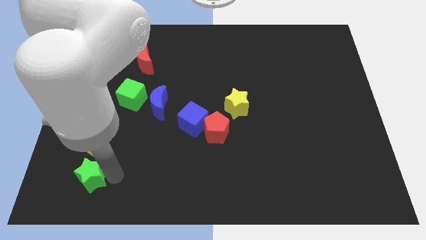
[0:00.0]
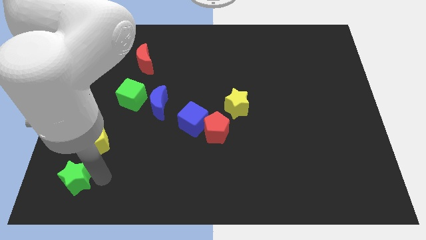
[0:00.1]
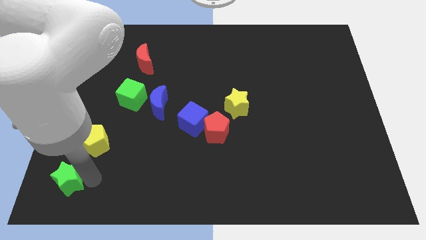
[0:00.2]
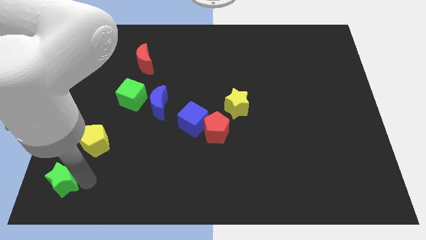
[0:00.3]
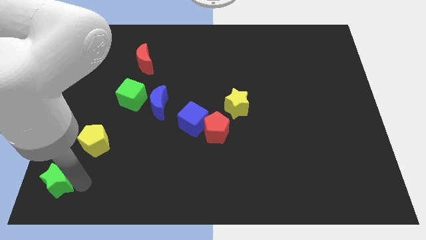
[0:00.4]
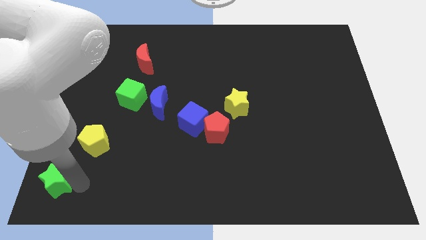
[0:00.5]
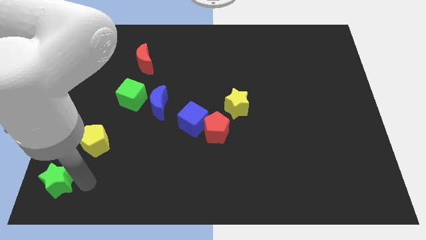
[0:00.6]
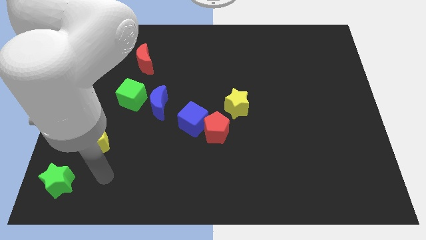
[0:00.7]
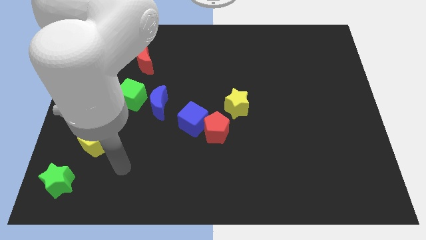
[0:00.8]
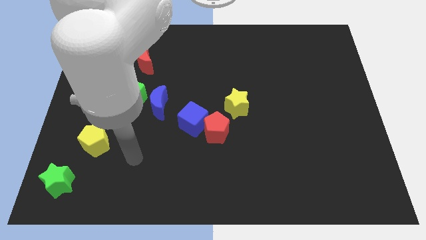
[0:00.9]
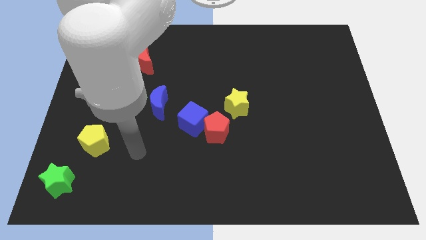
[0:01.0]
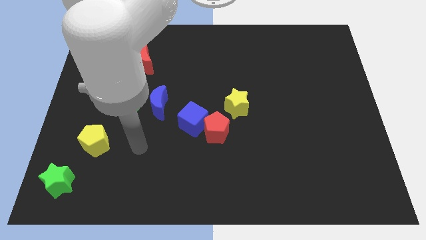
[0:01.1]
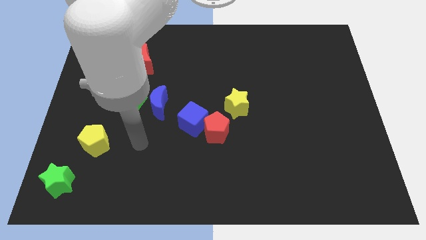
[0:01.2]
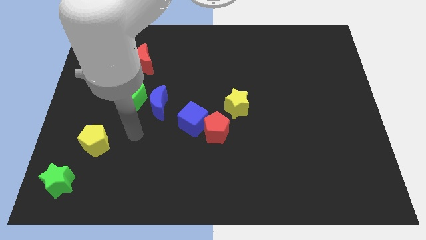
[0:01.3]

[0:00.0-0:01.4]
push the green star slightly to the left

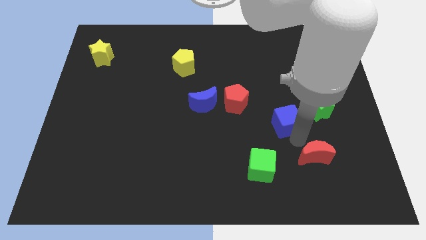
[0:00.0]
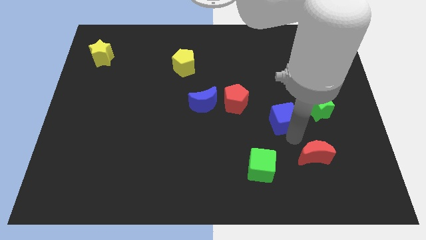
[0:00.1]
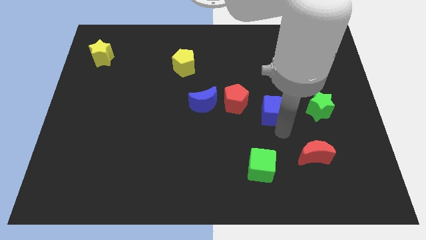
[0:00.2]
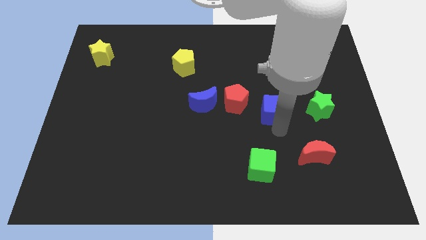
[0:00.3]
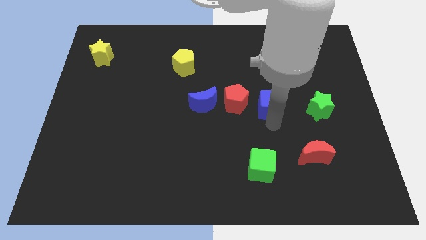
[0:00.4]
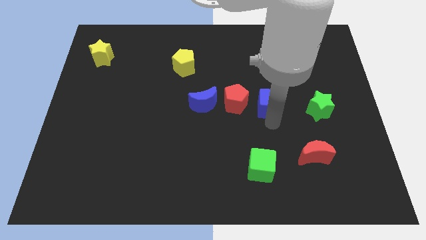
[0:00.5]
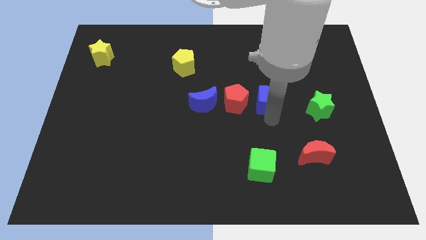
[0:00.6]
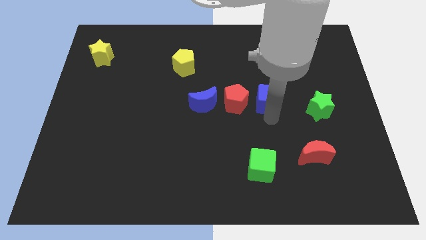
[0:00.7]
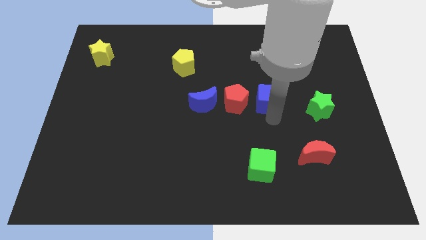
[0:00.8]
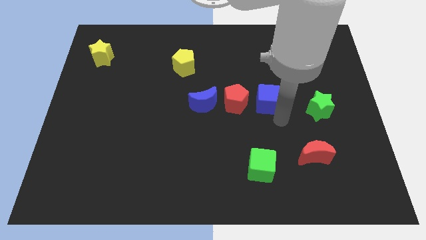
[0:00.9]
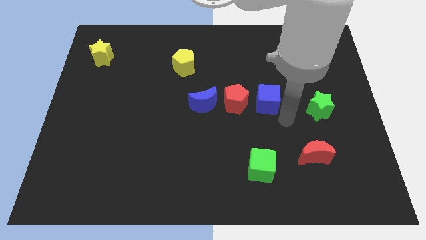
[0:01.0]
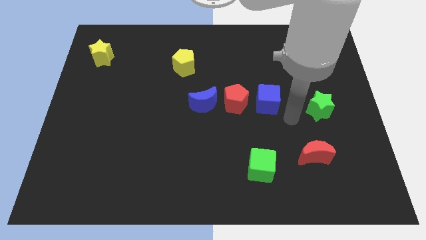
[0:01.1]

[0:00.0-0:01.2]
move the blue cube to the right of the red pentagon

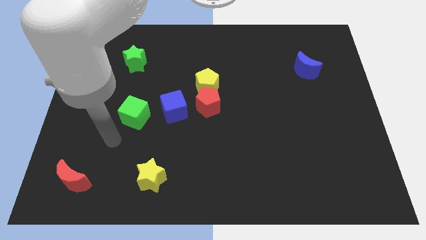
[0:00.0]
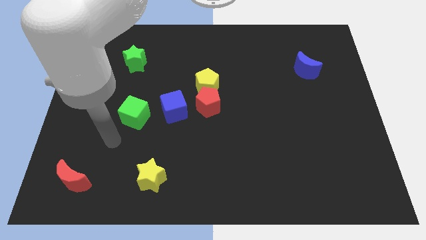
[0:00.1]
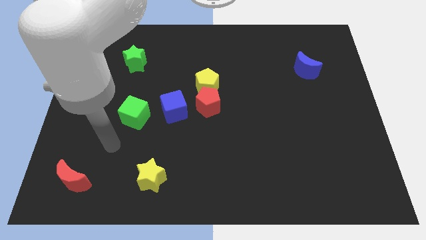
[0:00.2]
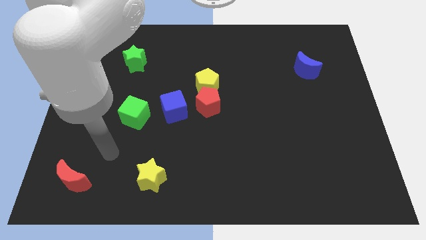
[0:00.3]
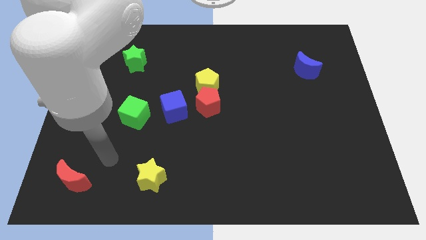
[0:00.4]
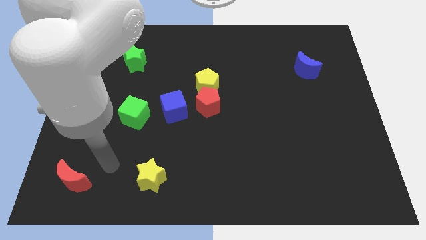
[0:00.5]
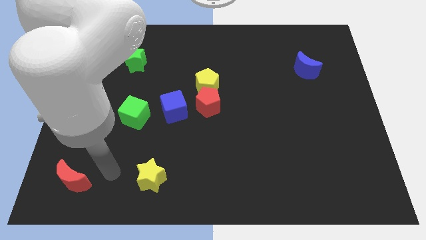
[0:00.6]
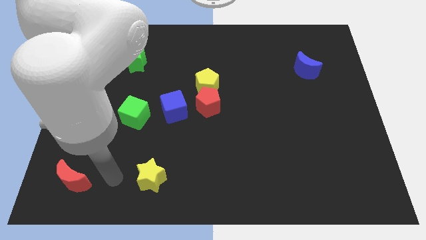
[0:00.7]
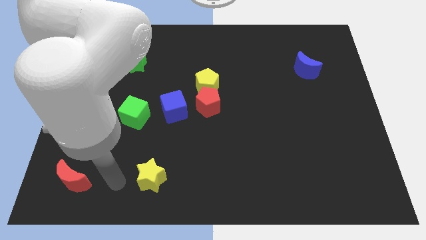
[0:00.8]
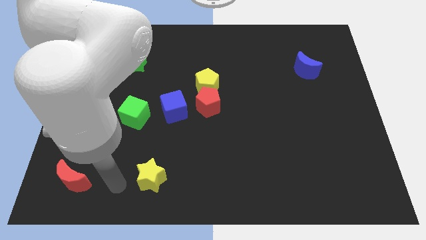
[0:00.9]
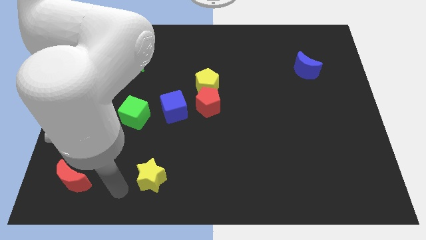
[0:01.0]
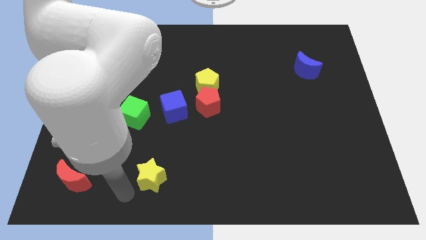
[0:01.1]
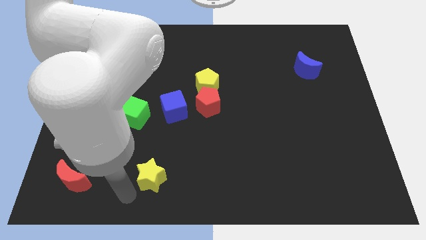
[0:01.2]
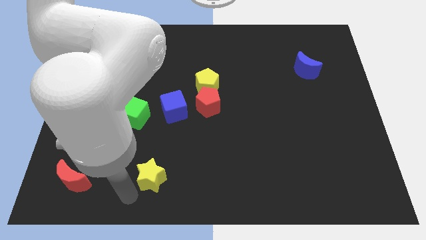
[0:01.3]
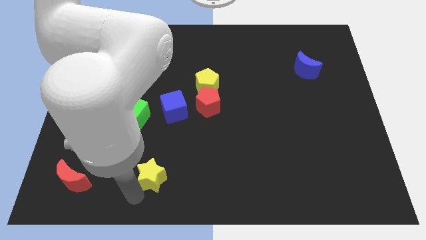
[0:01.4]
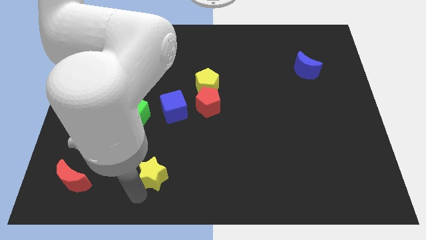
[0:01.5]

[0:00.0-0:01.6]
move your arm towards the yellow star

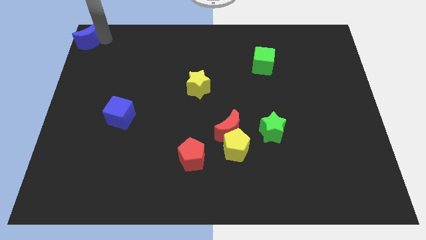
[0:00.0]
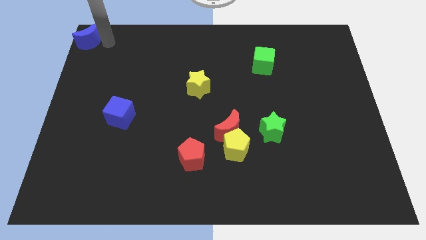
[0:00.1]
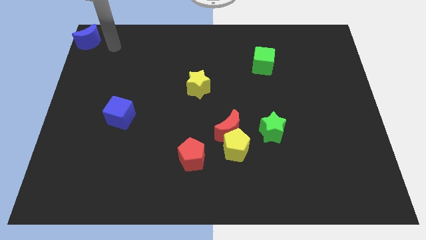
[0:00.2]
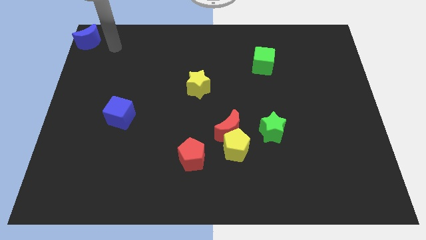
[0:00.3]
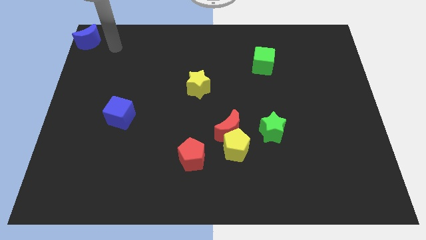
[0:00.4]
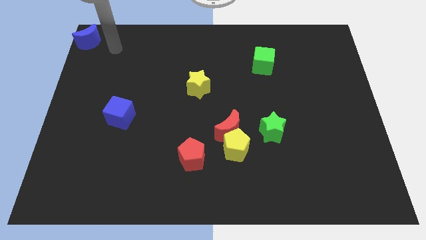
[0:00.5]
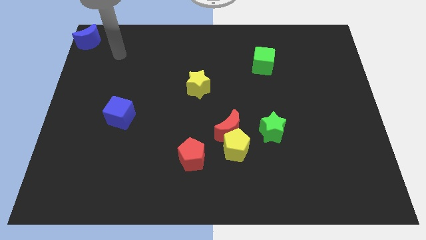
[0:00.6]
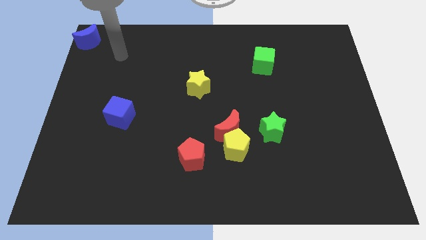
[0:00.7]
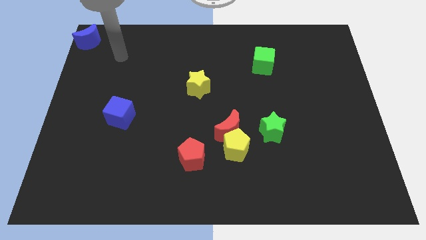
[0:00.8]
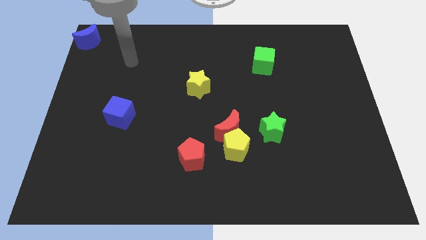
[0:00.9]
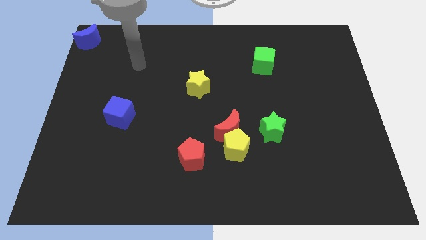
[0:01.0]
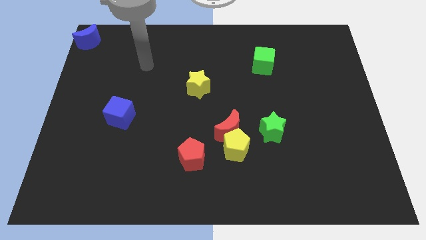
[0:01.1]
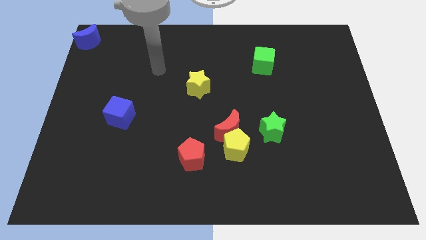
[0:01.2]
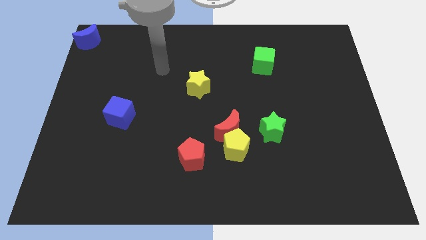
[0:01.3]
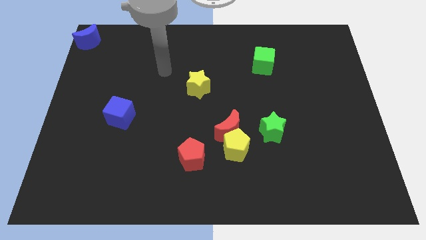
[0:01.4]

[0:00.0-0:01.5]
take your arm away from the blue crescent

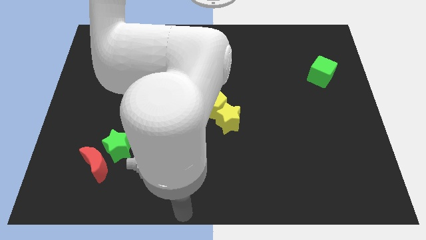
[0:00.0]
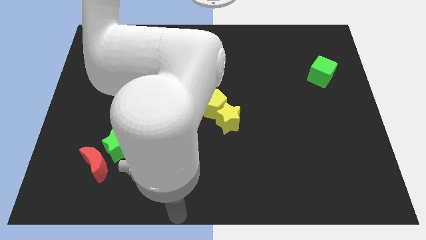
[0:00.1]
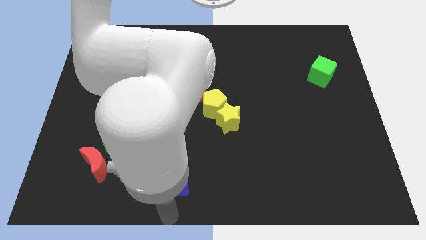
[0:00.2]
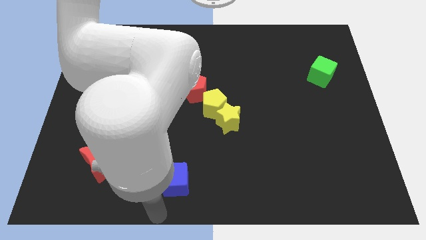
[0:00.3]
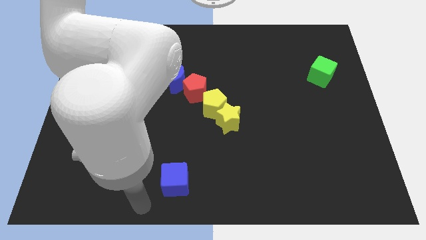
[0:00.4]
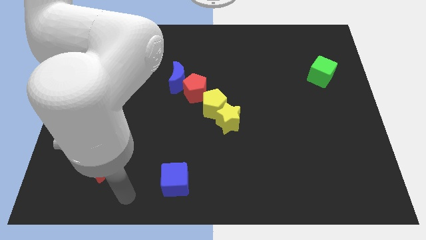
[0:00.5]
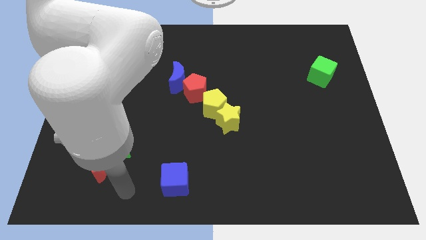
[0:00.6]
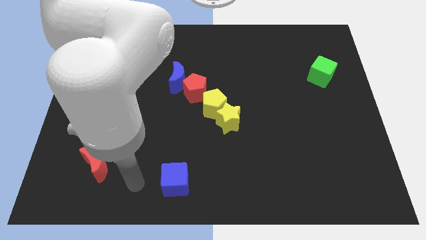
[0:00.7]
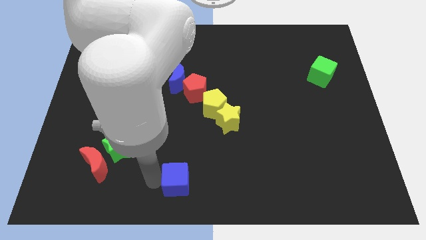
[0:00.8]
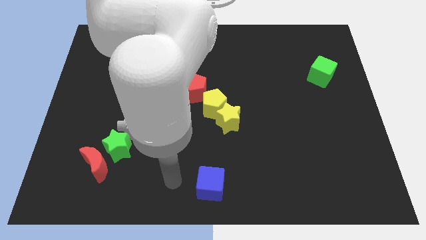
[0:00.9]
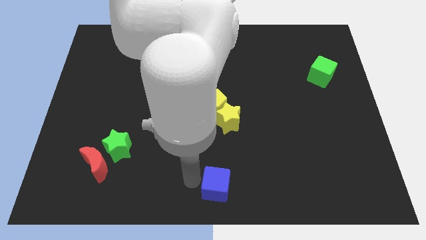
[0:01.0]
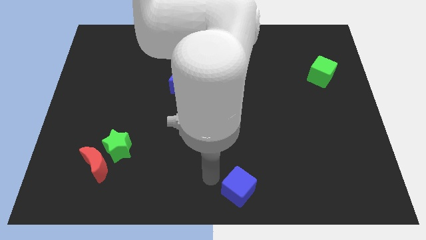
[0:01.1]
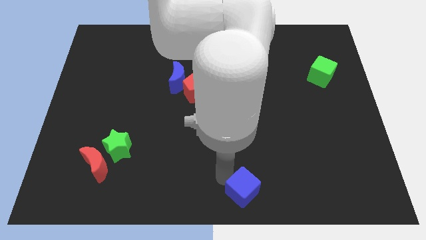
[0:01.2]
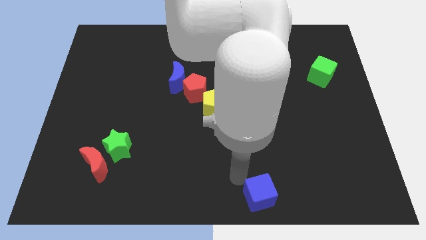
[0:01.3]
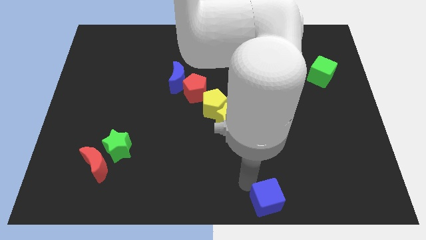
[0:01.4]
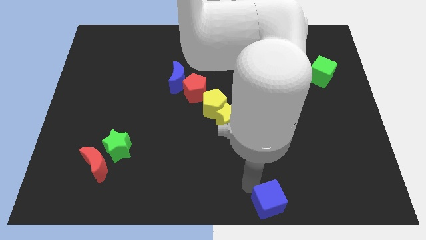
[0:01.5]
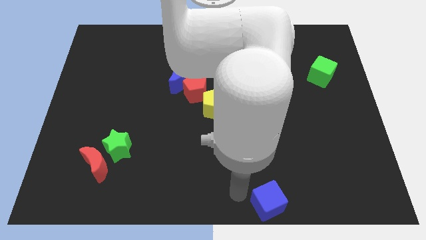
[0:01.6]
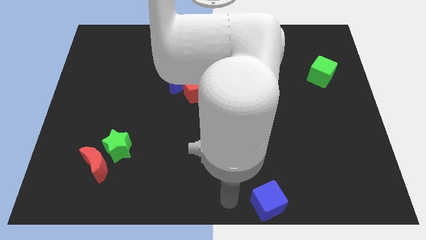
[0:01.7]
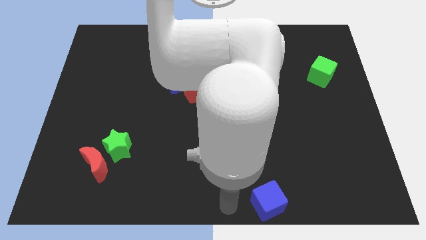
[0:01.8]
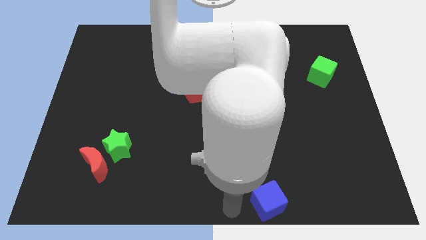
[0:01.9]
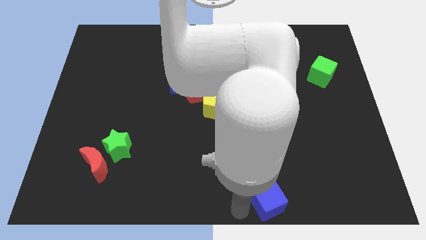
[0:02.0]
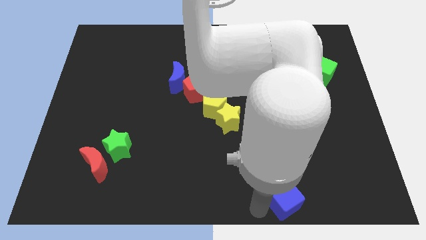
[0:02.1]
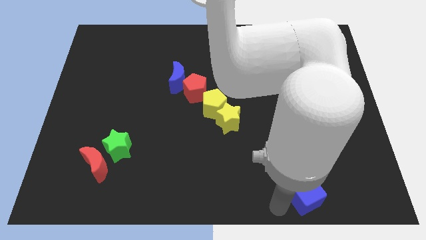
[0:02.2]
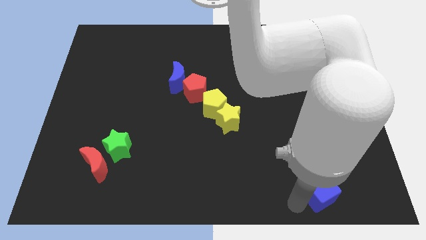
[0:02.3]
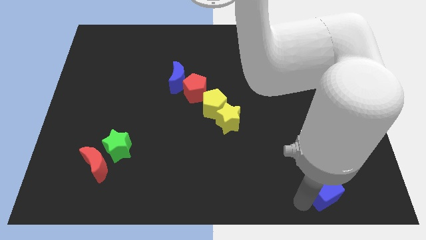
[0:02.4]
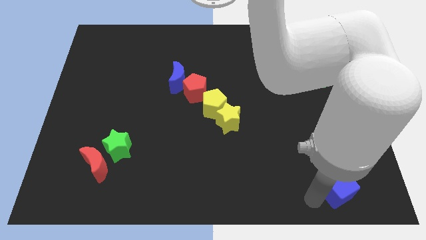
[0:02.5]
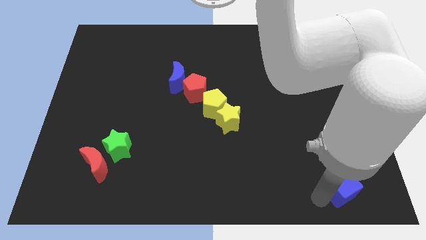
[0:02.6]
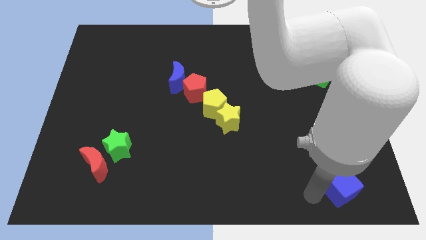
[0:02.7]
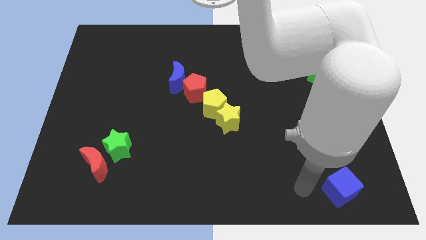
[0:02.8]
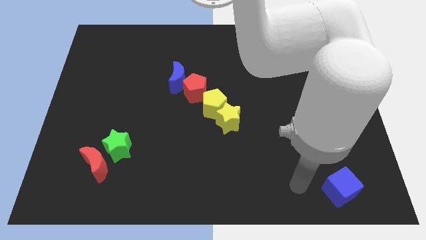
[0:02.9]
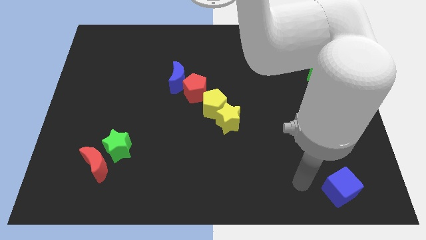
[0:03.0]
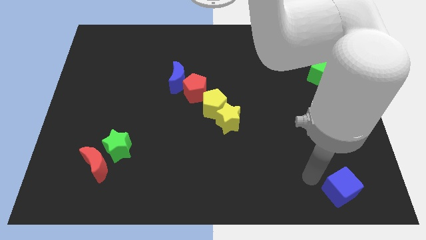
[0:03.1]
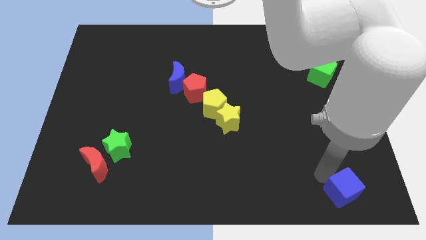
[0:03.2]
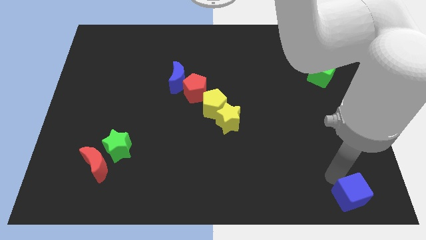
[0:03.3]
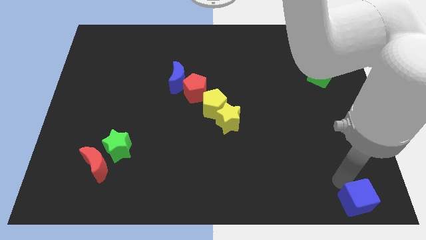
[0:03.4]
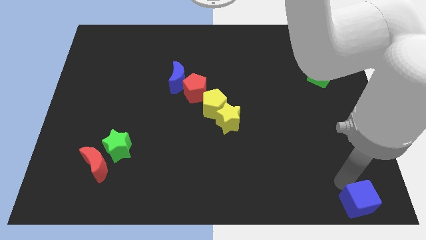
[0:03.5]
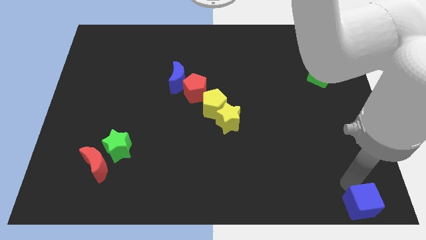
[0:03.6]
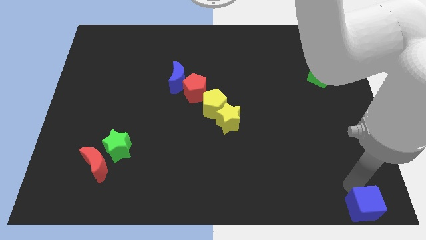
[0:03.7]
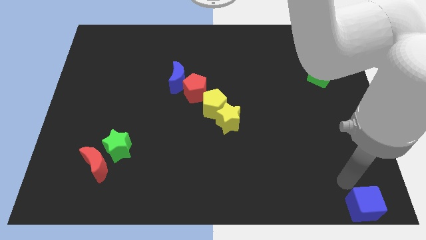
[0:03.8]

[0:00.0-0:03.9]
move the blue cube to the bottom right of the board
